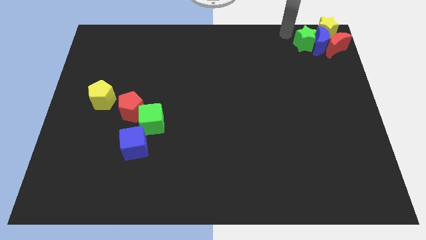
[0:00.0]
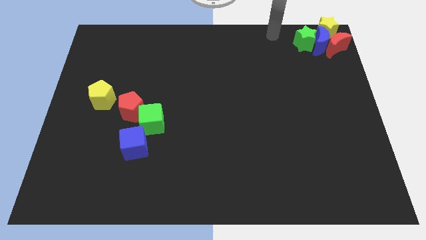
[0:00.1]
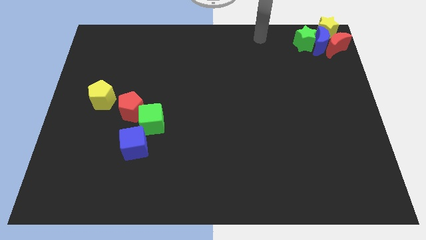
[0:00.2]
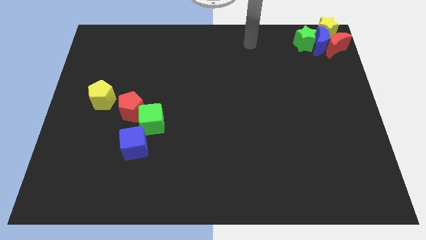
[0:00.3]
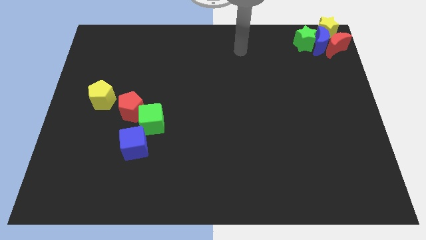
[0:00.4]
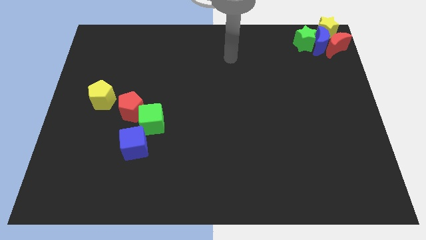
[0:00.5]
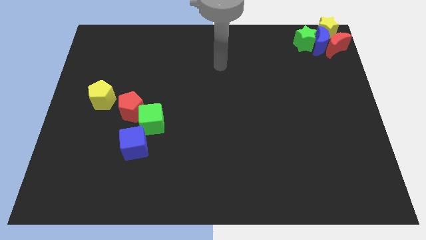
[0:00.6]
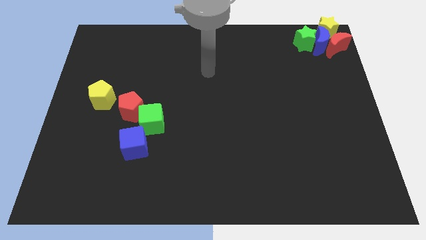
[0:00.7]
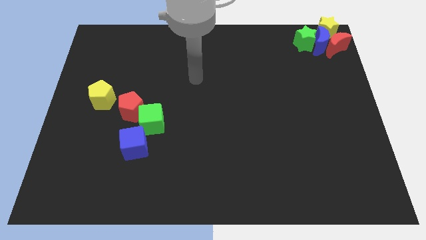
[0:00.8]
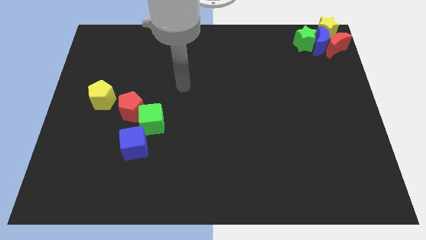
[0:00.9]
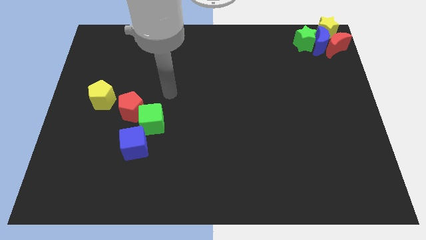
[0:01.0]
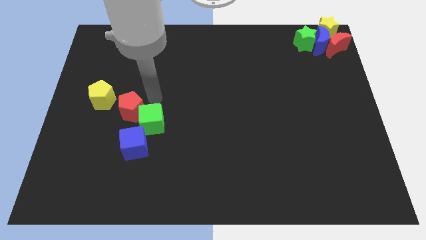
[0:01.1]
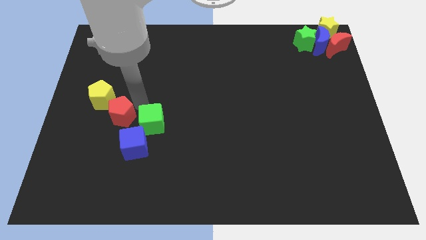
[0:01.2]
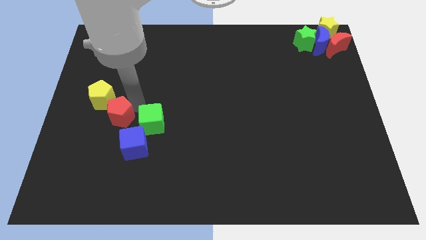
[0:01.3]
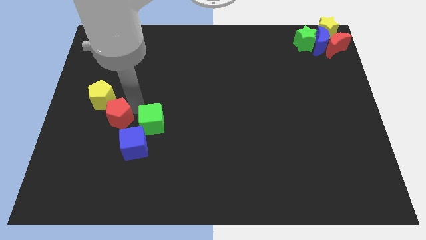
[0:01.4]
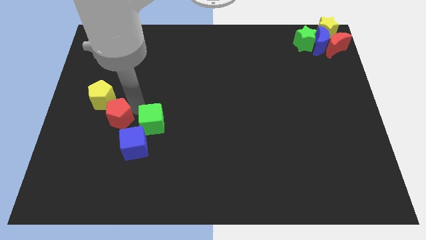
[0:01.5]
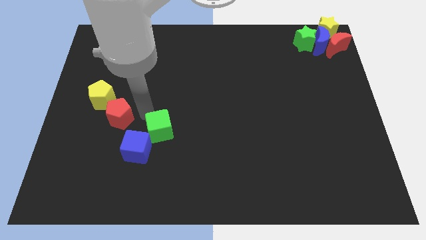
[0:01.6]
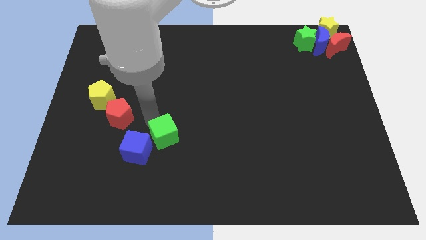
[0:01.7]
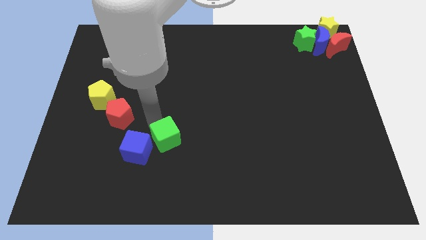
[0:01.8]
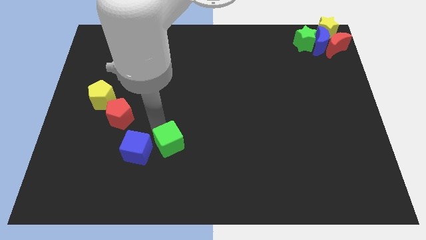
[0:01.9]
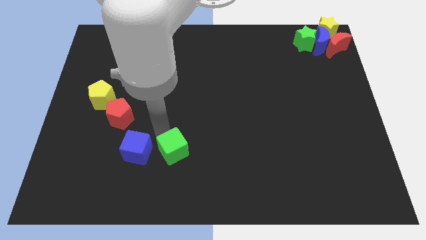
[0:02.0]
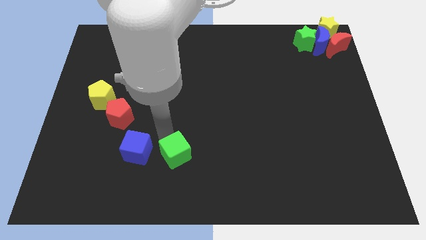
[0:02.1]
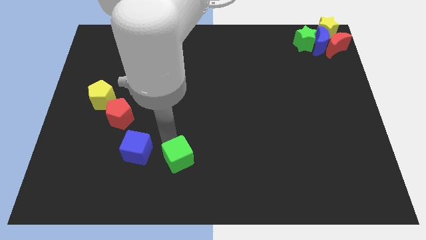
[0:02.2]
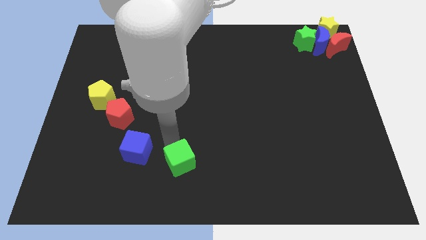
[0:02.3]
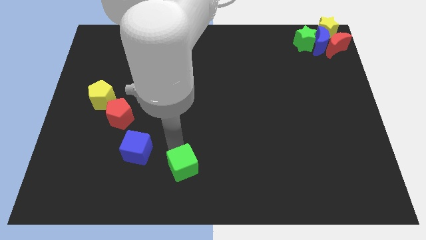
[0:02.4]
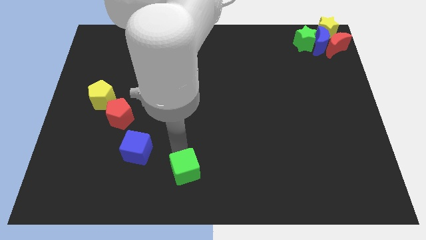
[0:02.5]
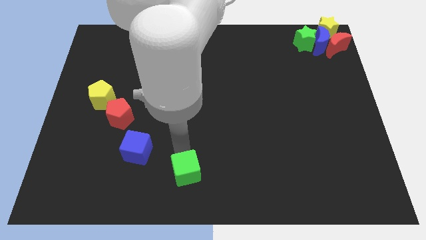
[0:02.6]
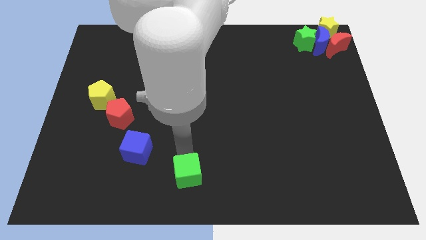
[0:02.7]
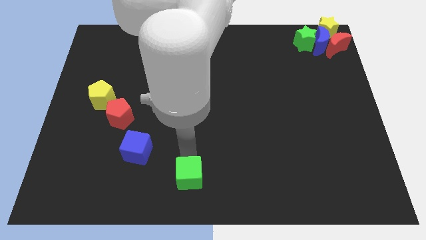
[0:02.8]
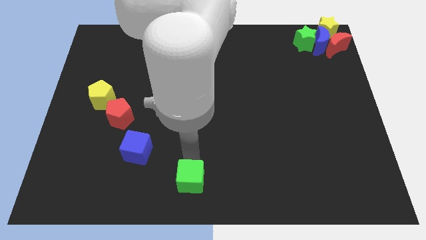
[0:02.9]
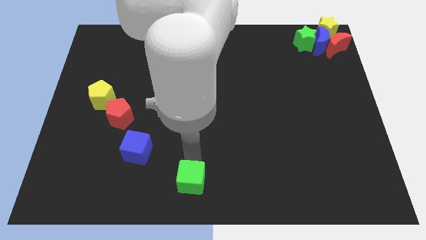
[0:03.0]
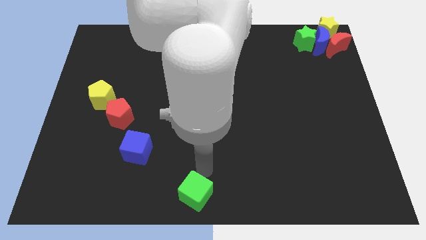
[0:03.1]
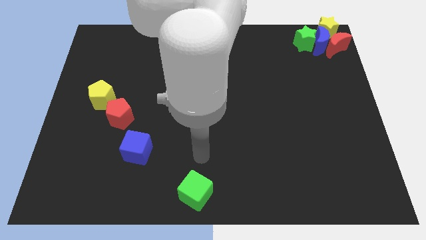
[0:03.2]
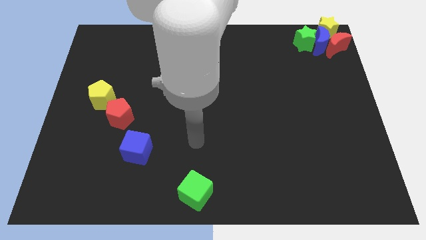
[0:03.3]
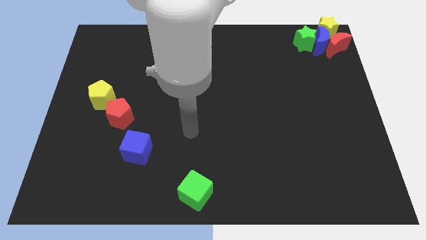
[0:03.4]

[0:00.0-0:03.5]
separate the green cube from red pentagon

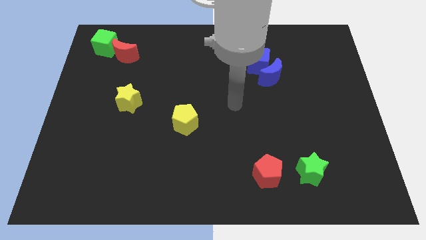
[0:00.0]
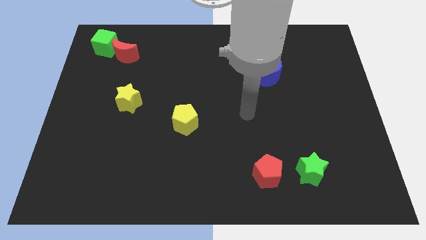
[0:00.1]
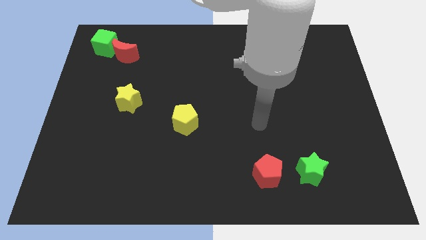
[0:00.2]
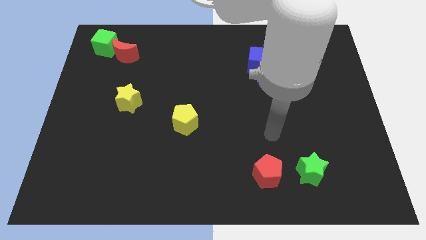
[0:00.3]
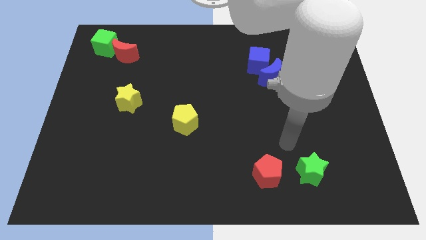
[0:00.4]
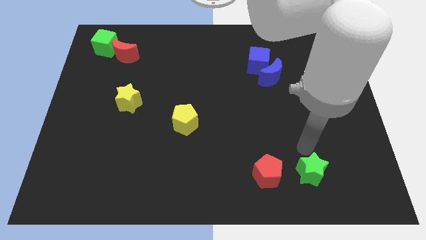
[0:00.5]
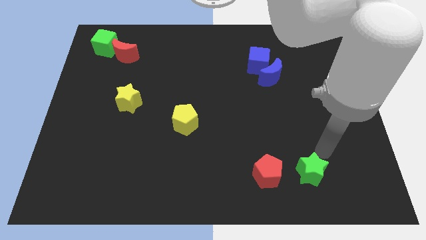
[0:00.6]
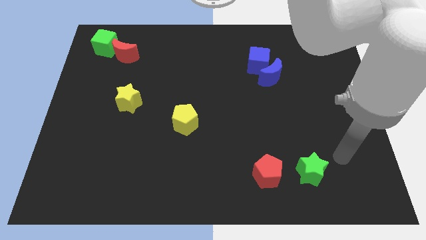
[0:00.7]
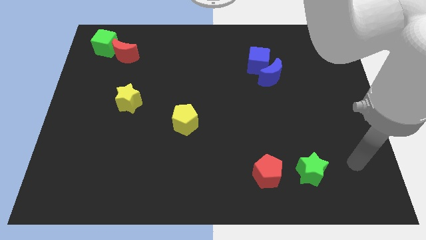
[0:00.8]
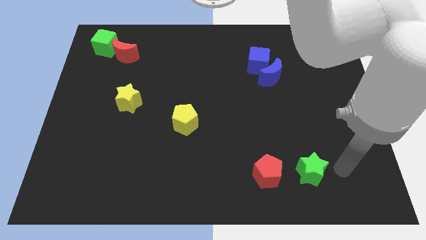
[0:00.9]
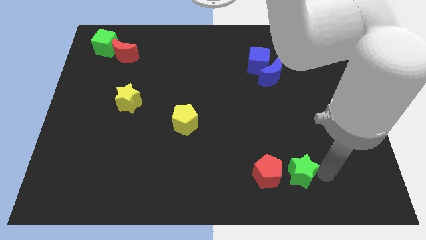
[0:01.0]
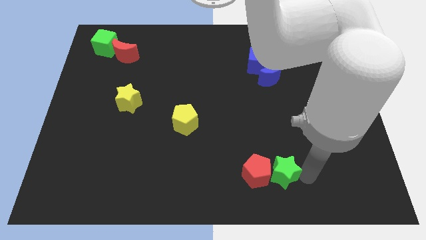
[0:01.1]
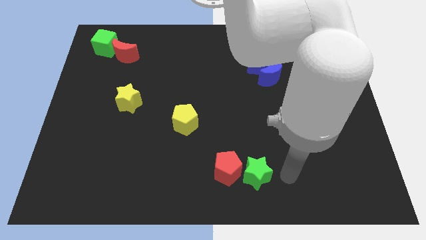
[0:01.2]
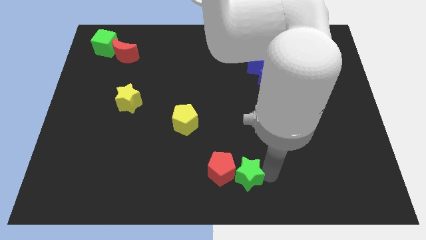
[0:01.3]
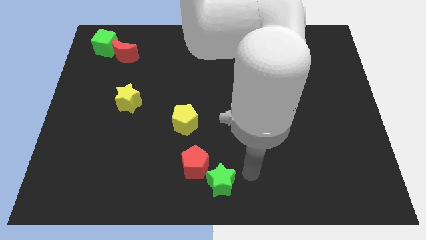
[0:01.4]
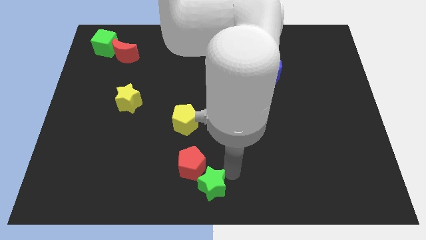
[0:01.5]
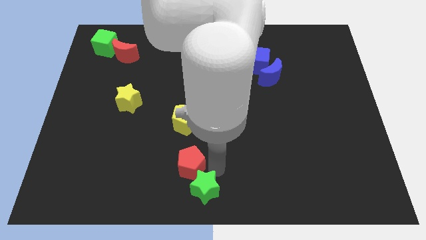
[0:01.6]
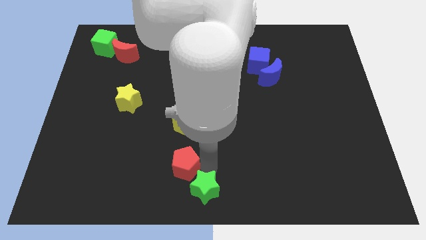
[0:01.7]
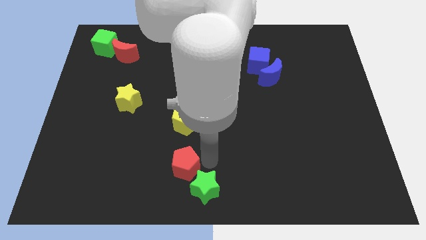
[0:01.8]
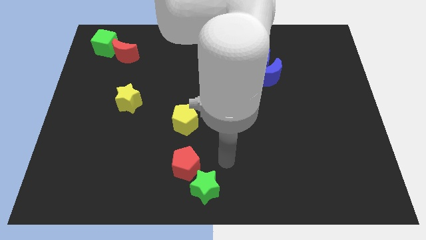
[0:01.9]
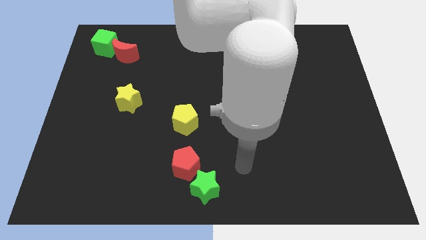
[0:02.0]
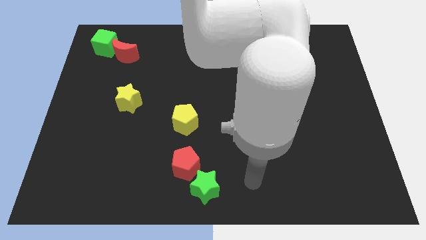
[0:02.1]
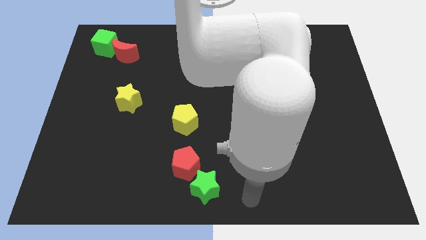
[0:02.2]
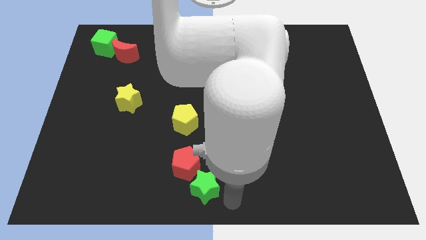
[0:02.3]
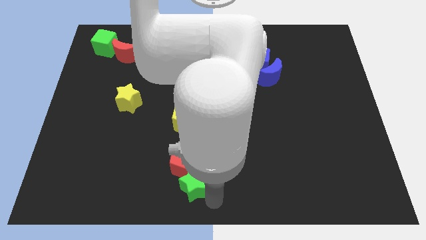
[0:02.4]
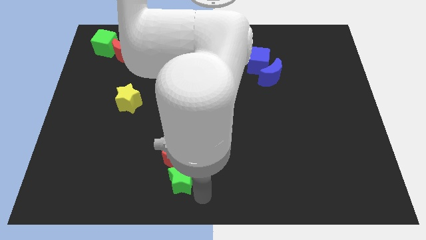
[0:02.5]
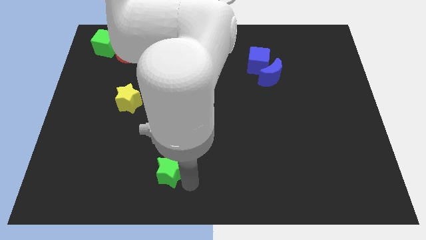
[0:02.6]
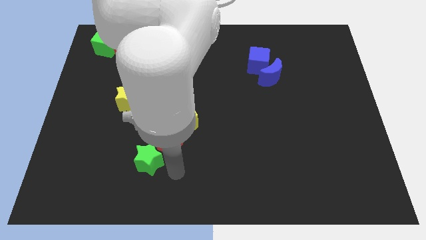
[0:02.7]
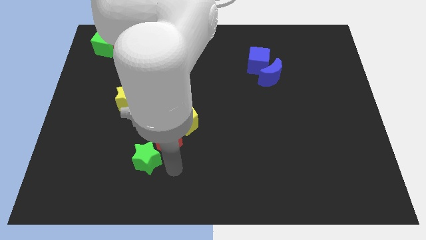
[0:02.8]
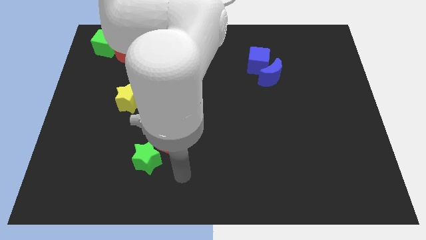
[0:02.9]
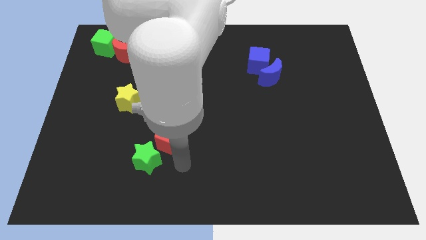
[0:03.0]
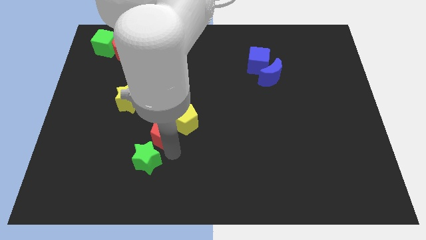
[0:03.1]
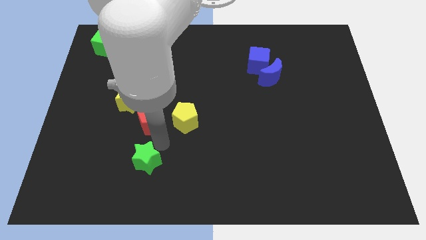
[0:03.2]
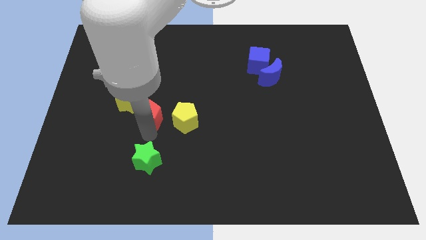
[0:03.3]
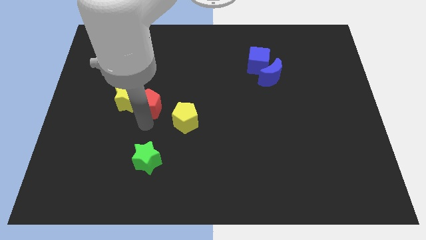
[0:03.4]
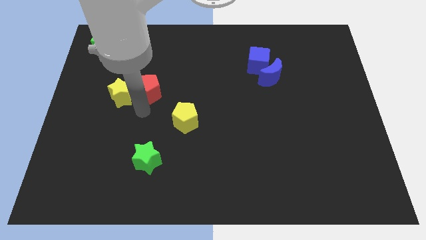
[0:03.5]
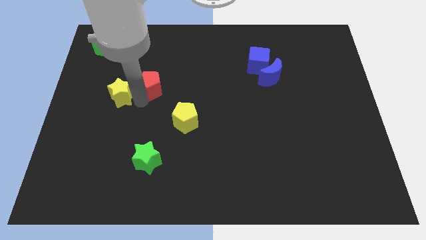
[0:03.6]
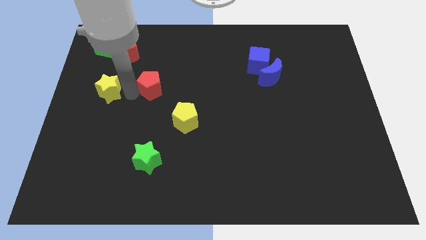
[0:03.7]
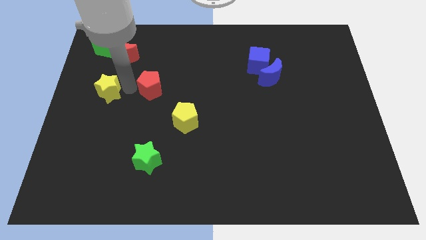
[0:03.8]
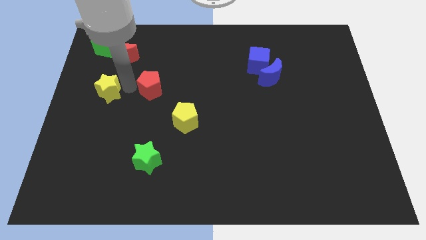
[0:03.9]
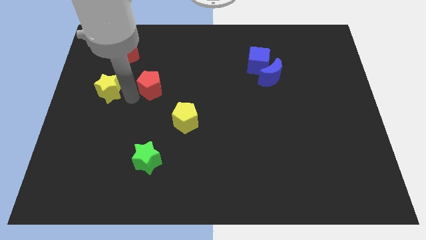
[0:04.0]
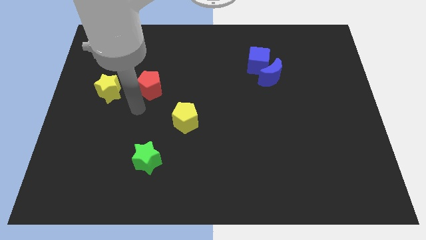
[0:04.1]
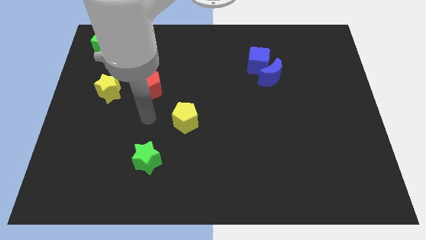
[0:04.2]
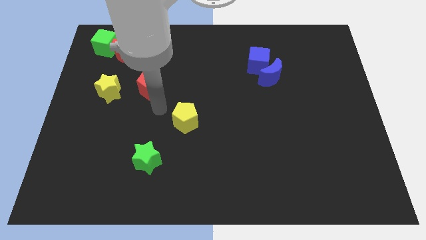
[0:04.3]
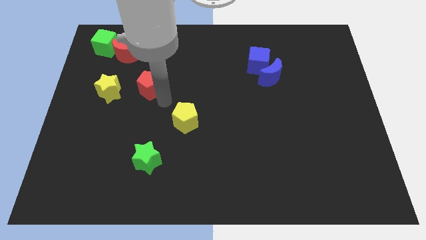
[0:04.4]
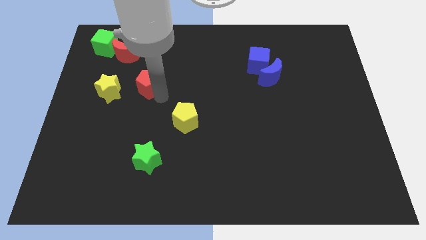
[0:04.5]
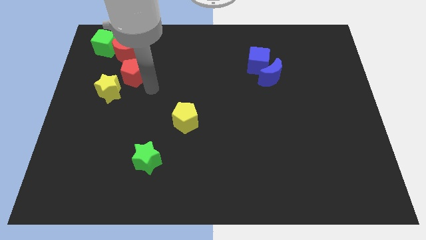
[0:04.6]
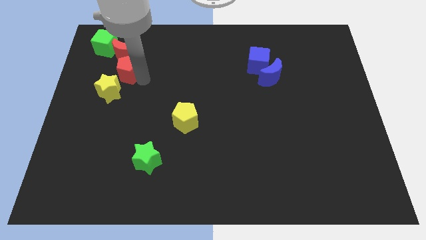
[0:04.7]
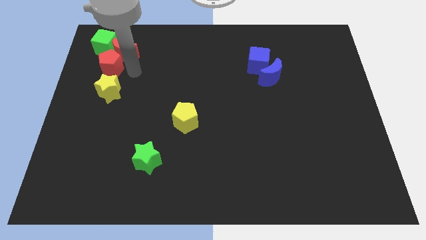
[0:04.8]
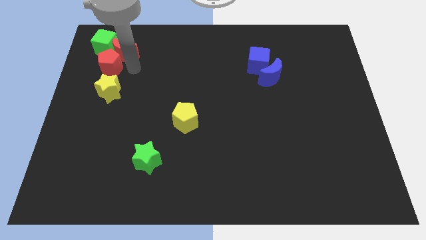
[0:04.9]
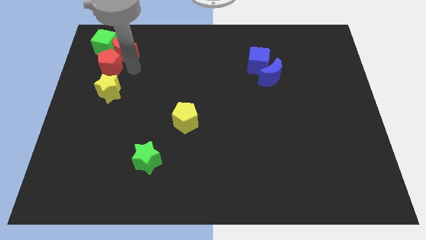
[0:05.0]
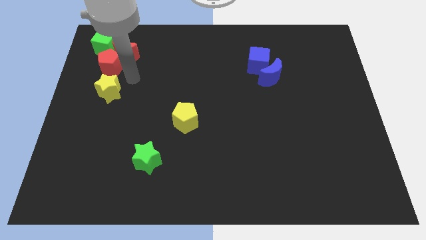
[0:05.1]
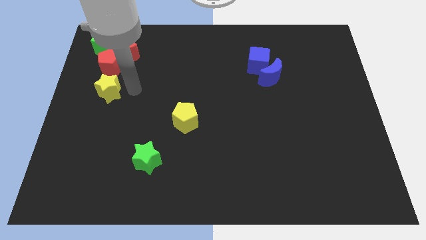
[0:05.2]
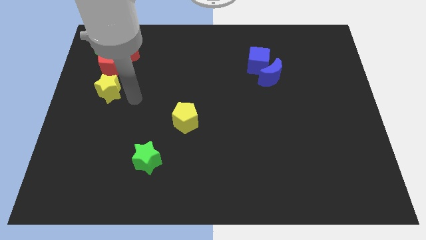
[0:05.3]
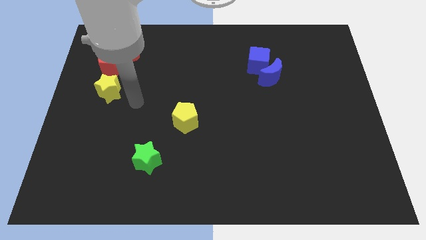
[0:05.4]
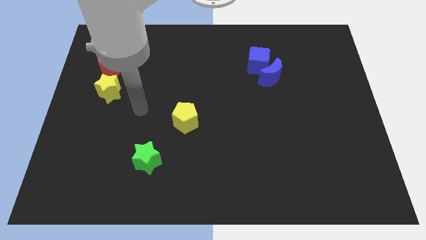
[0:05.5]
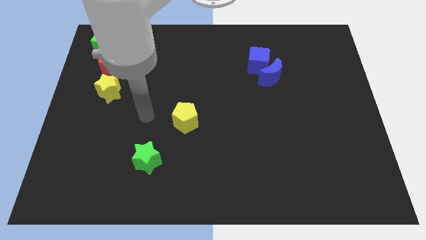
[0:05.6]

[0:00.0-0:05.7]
place the red pentagon to the bottom left of the red crescent
